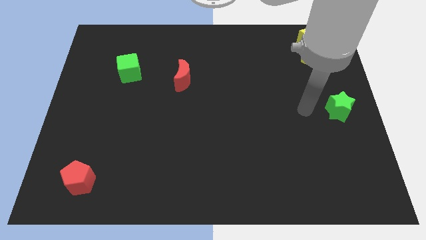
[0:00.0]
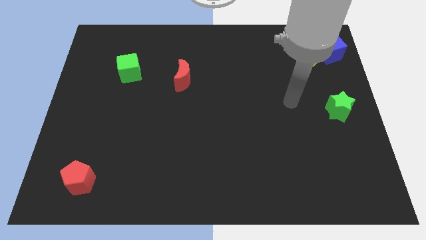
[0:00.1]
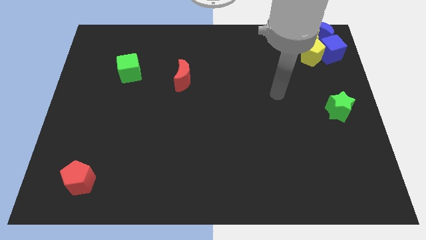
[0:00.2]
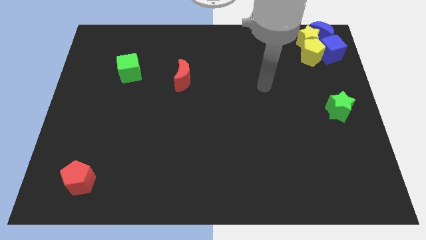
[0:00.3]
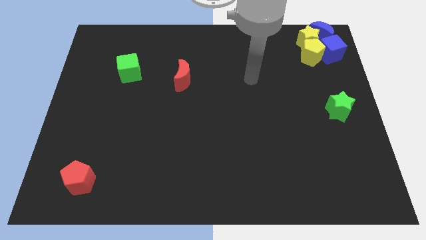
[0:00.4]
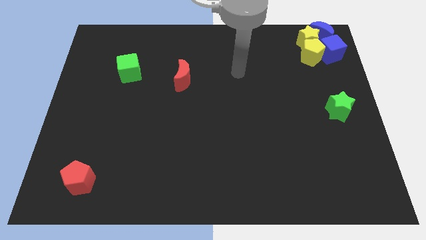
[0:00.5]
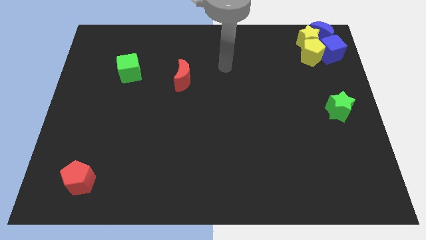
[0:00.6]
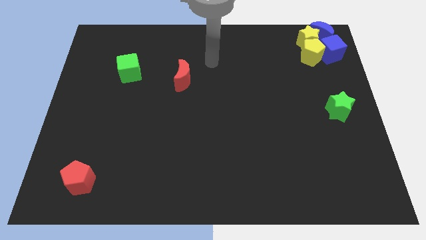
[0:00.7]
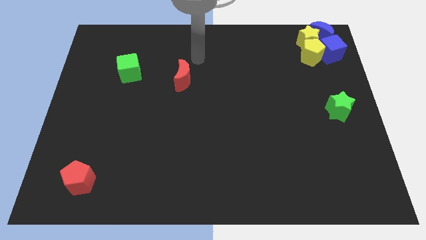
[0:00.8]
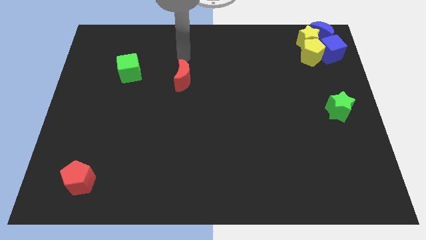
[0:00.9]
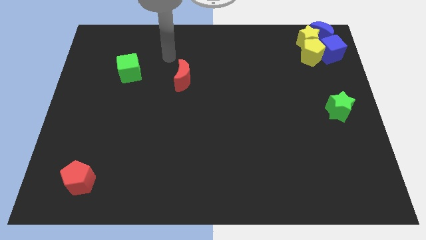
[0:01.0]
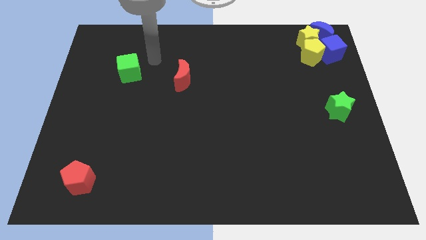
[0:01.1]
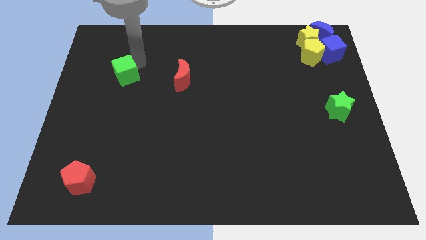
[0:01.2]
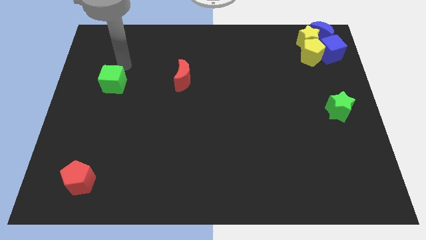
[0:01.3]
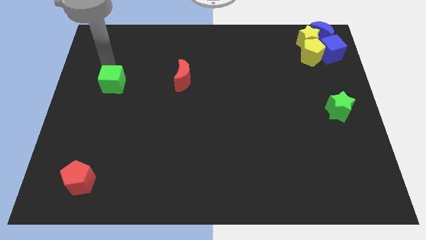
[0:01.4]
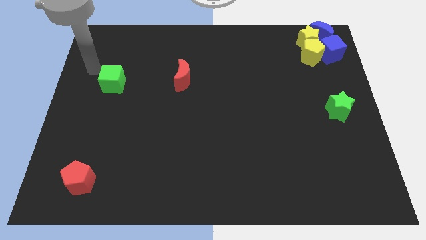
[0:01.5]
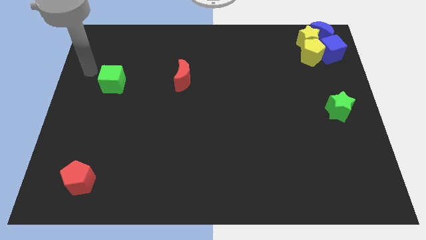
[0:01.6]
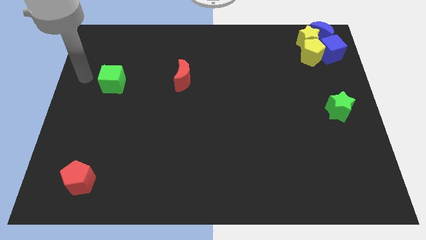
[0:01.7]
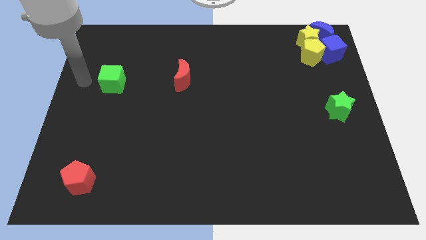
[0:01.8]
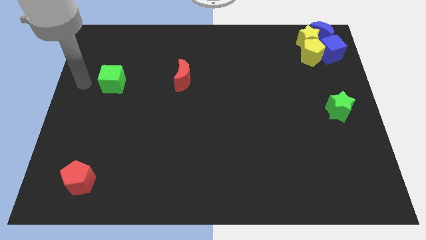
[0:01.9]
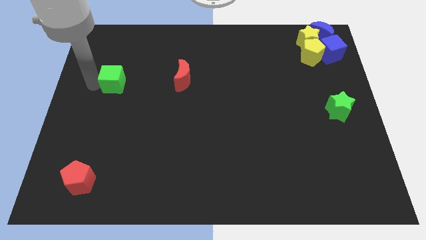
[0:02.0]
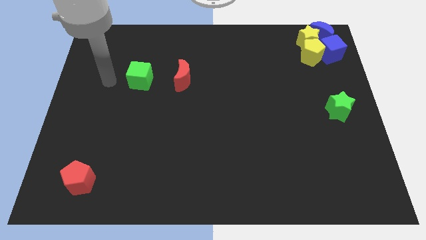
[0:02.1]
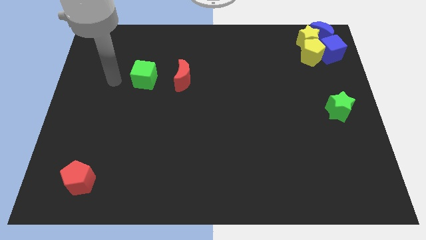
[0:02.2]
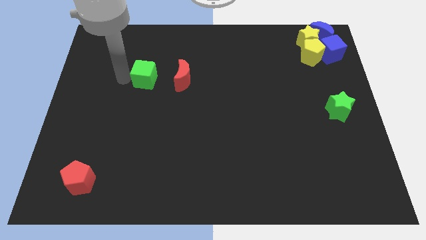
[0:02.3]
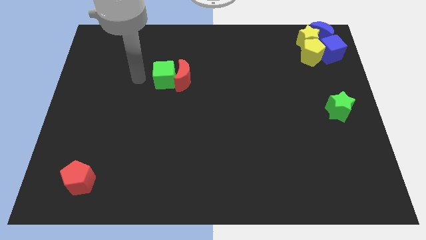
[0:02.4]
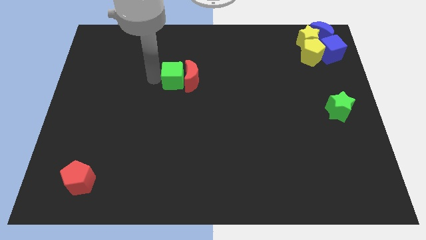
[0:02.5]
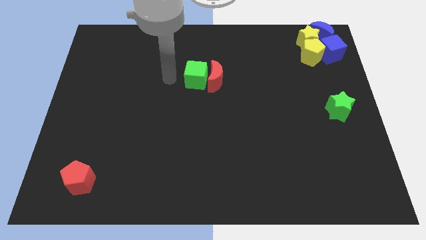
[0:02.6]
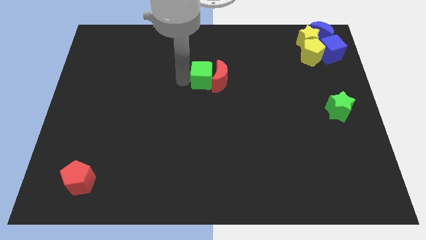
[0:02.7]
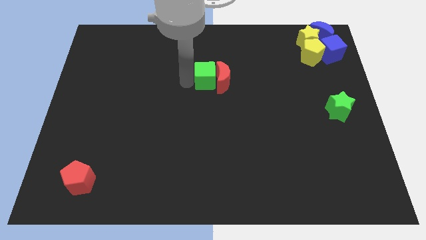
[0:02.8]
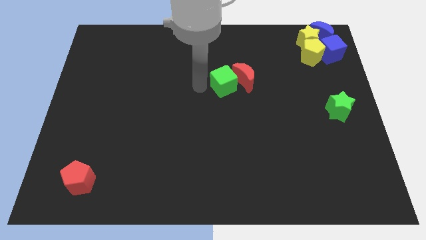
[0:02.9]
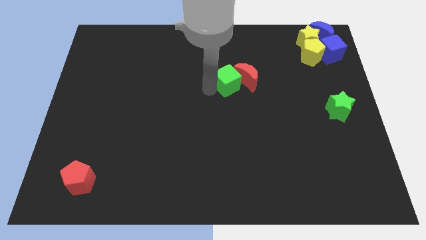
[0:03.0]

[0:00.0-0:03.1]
push the green cube and red moon to the right side of the board

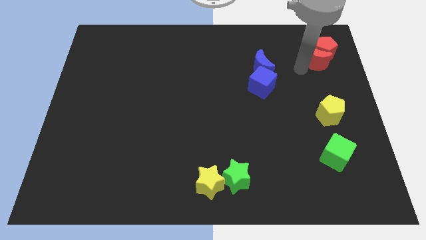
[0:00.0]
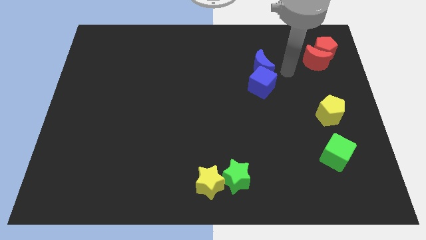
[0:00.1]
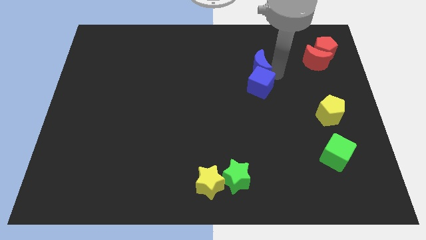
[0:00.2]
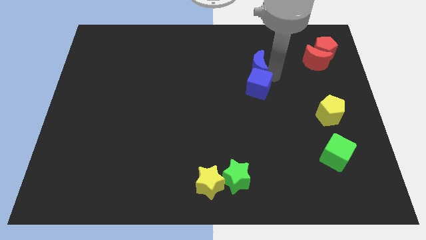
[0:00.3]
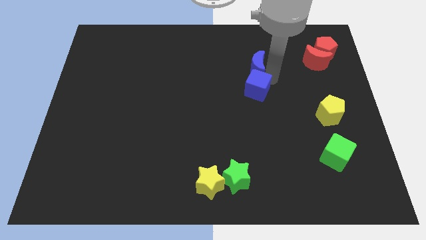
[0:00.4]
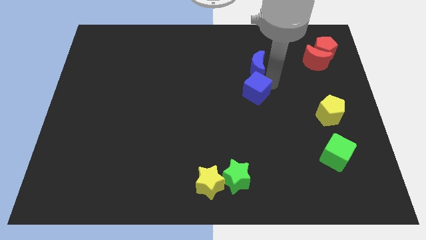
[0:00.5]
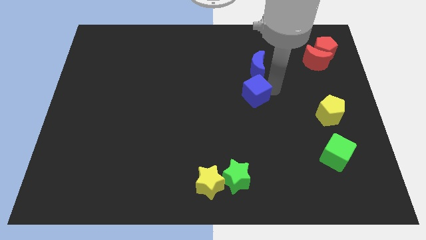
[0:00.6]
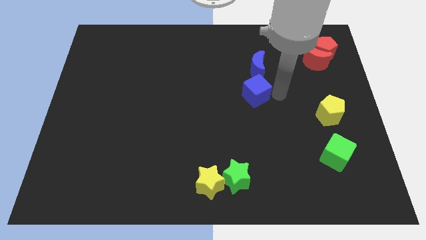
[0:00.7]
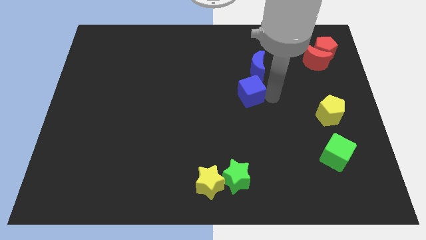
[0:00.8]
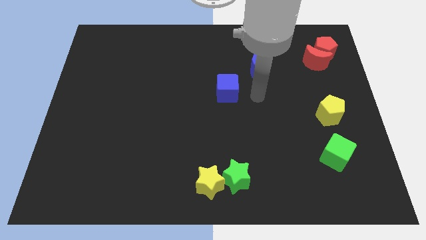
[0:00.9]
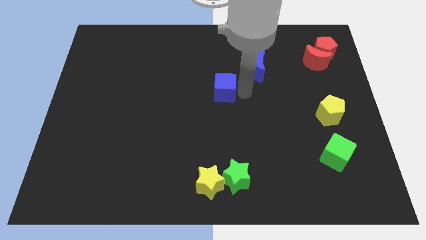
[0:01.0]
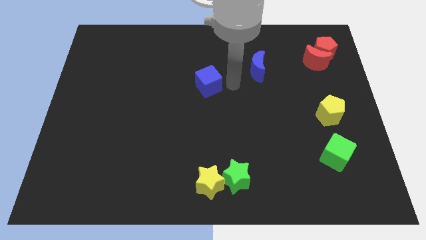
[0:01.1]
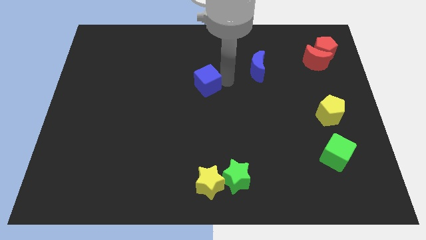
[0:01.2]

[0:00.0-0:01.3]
slide the blue cube away from the blue crescent

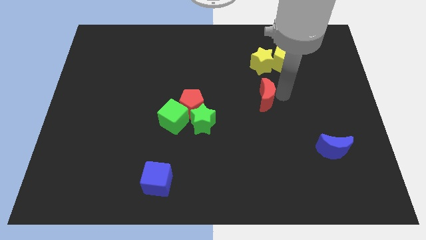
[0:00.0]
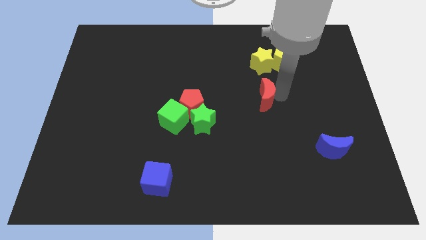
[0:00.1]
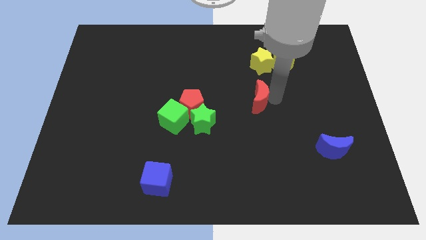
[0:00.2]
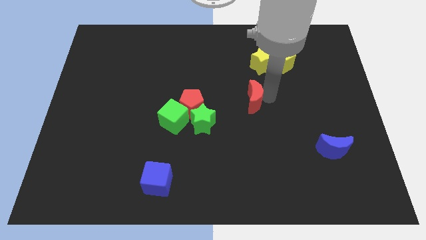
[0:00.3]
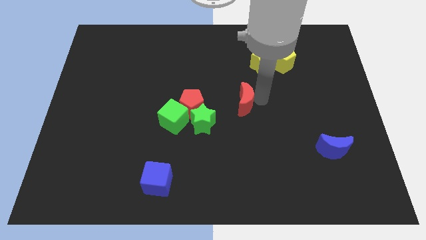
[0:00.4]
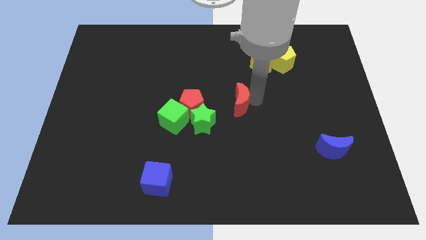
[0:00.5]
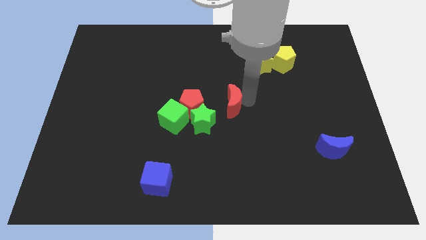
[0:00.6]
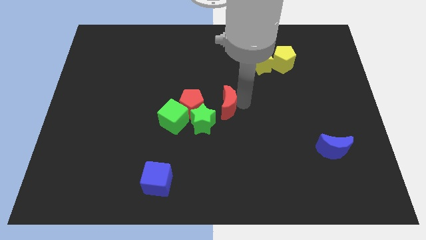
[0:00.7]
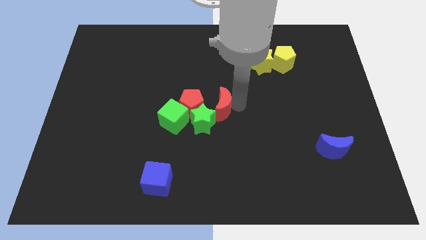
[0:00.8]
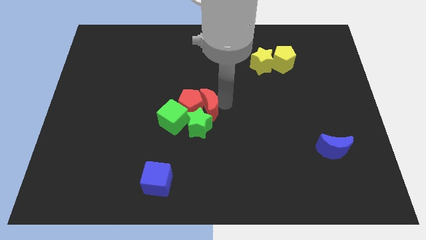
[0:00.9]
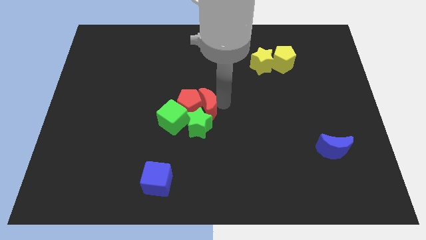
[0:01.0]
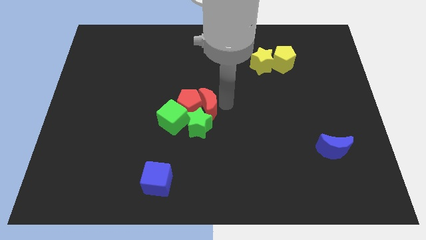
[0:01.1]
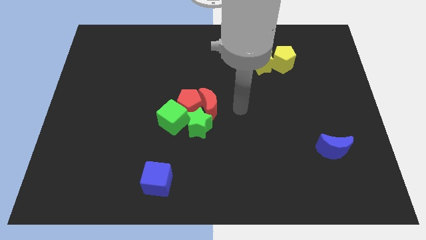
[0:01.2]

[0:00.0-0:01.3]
push the red crescent to the top of the green star

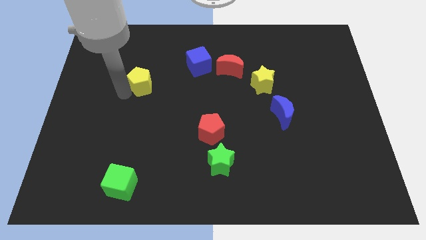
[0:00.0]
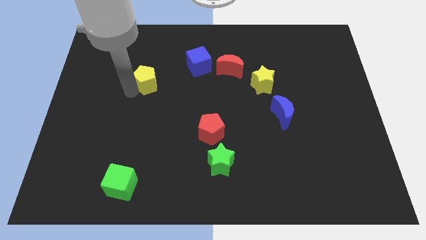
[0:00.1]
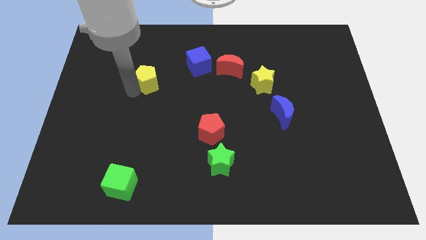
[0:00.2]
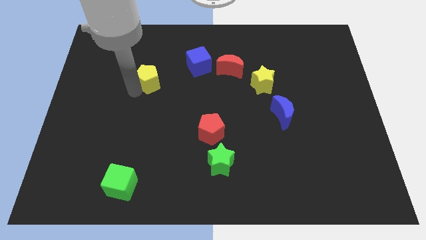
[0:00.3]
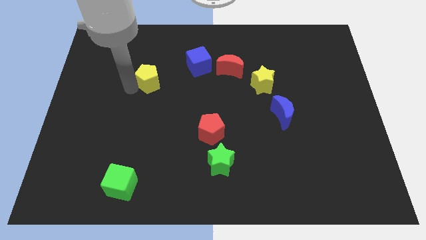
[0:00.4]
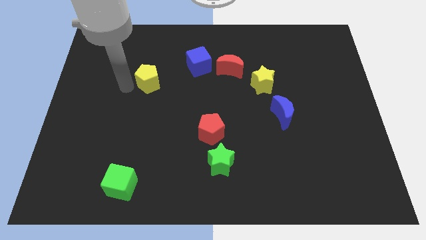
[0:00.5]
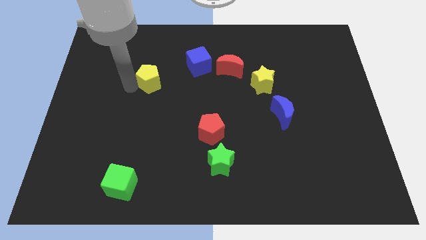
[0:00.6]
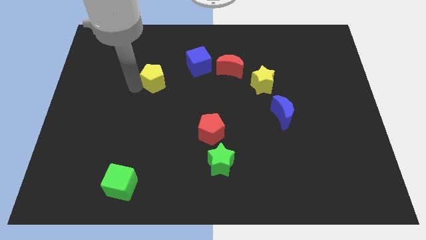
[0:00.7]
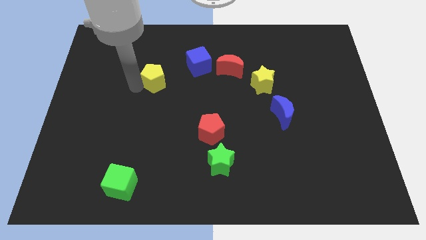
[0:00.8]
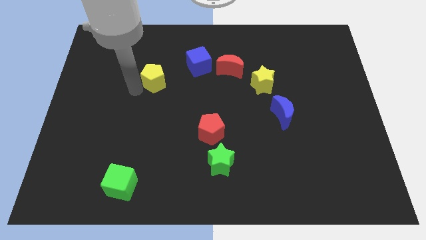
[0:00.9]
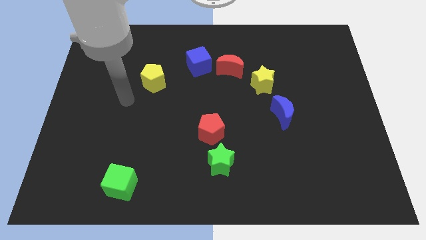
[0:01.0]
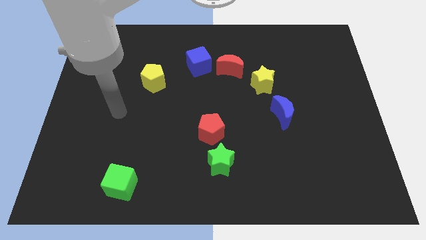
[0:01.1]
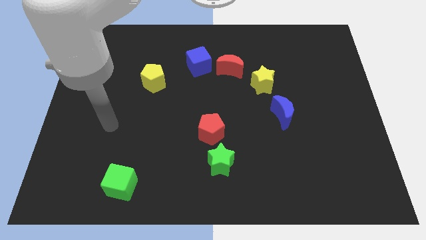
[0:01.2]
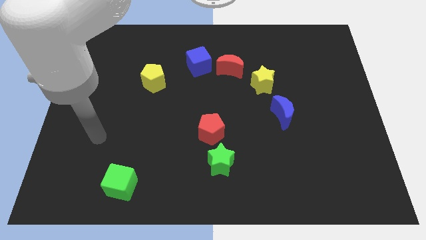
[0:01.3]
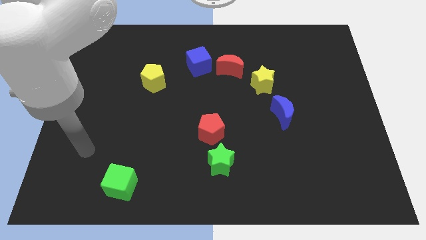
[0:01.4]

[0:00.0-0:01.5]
place the yellow pentagon left side of blue cube

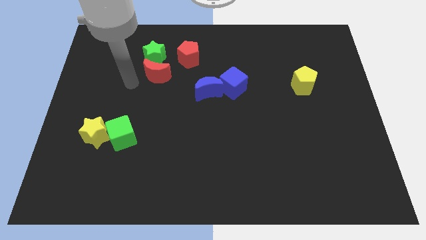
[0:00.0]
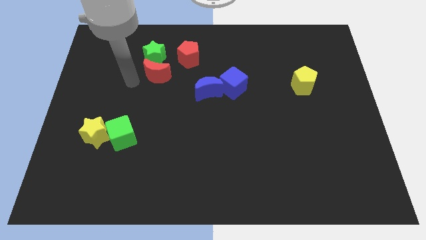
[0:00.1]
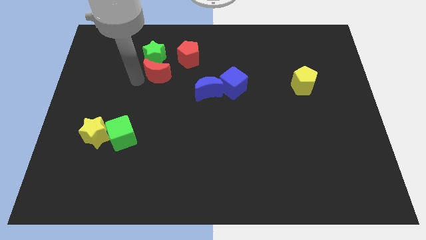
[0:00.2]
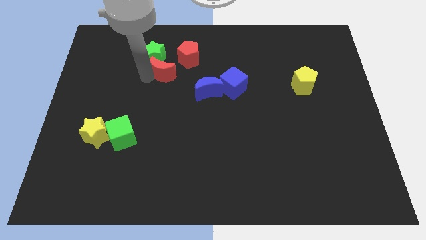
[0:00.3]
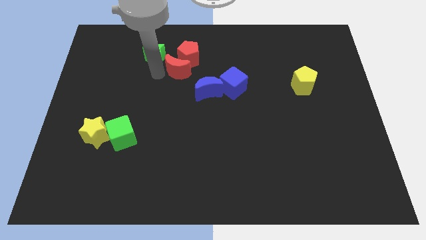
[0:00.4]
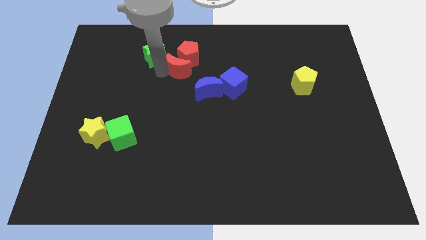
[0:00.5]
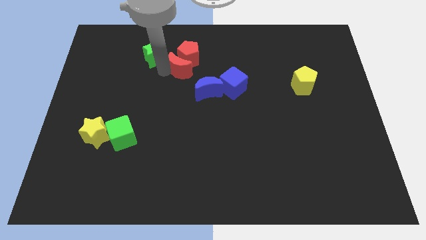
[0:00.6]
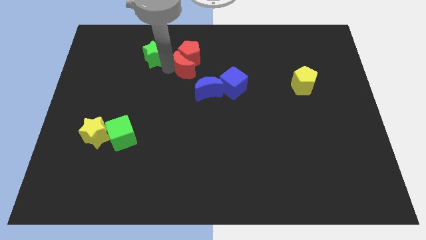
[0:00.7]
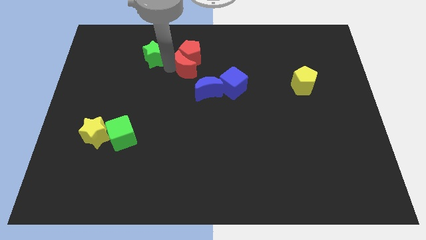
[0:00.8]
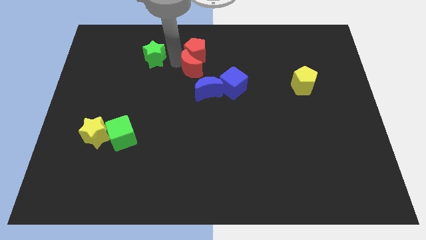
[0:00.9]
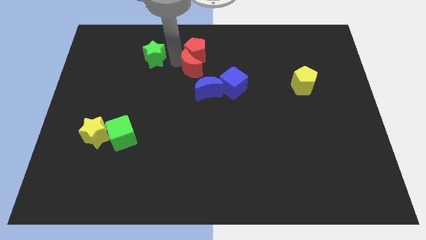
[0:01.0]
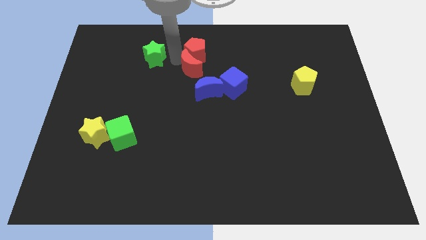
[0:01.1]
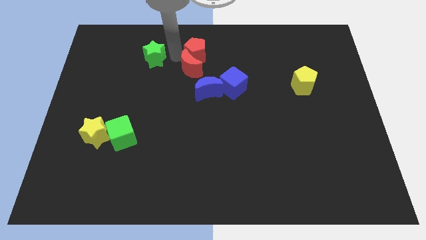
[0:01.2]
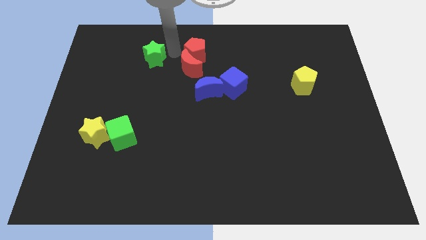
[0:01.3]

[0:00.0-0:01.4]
push the red moon into the red pentagon

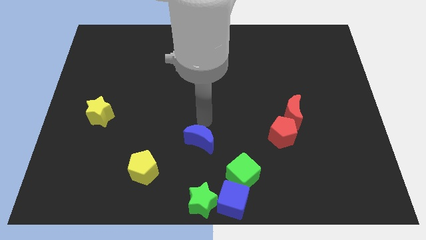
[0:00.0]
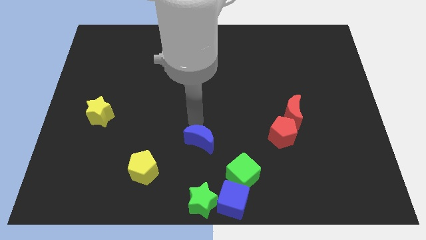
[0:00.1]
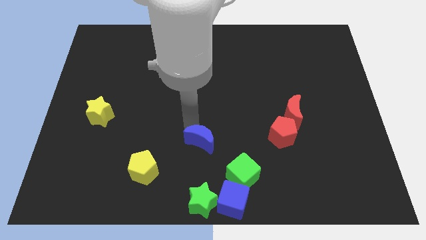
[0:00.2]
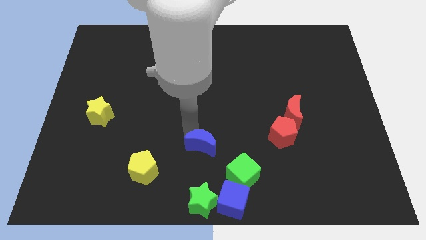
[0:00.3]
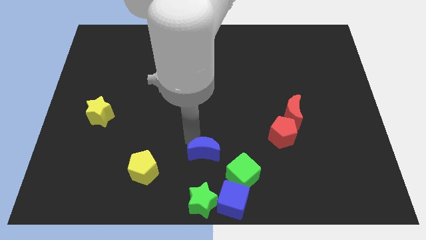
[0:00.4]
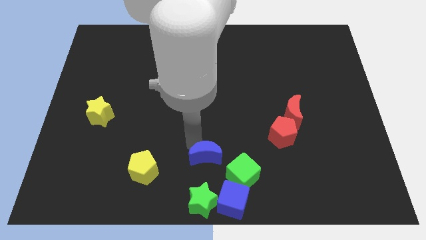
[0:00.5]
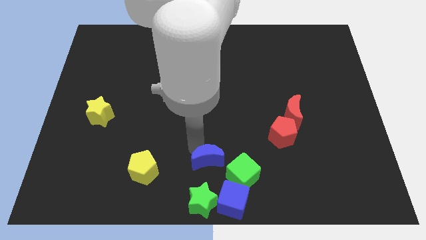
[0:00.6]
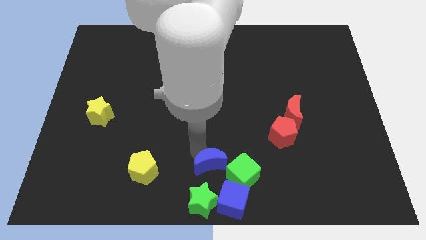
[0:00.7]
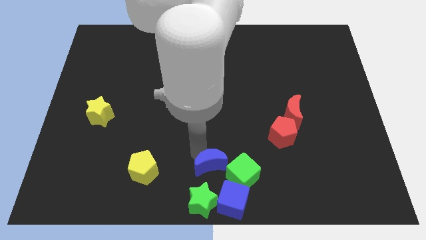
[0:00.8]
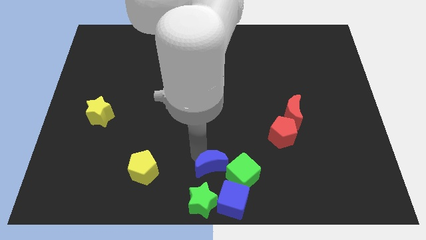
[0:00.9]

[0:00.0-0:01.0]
place the blue moon at the left side of the green cube
